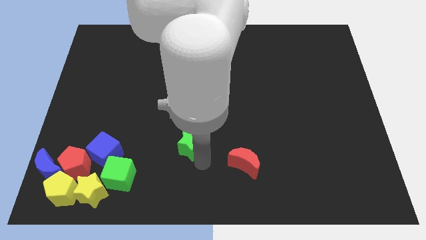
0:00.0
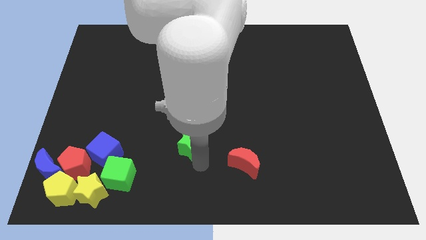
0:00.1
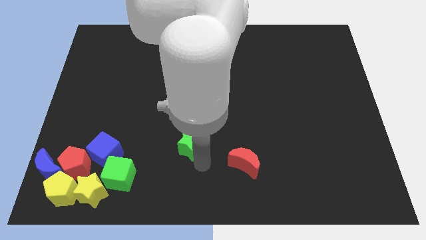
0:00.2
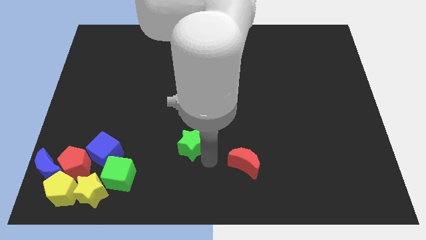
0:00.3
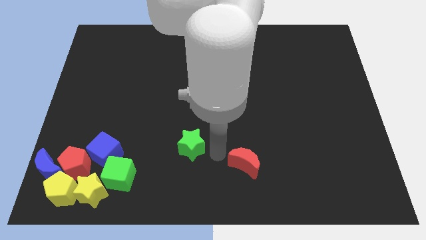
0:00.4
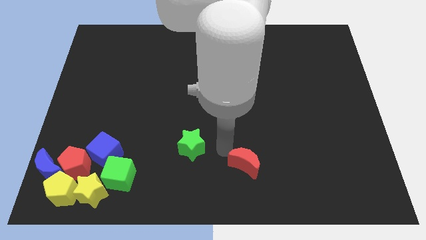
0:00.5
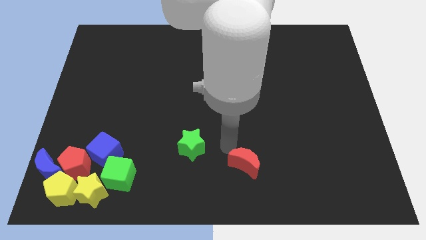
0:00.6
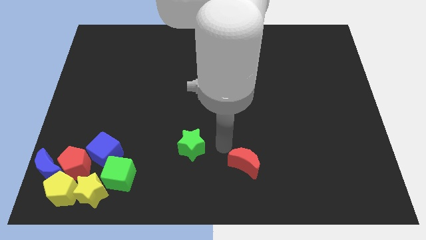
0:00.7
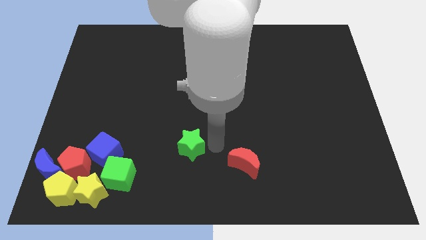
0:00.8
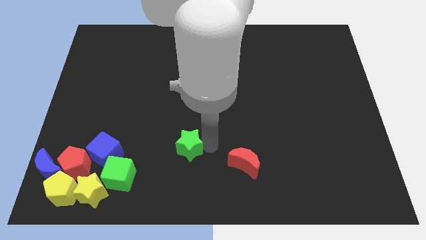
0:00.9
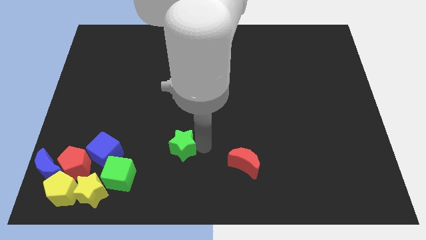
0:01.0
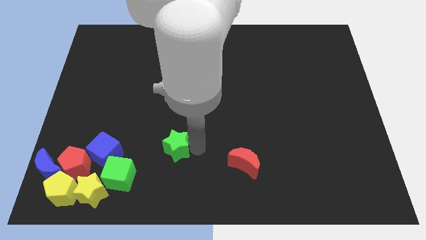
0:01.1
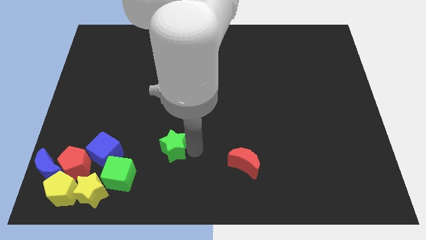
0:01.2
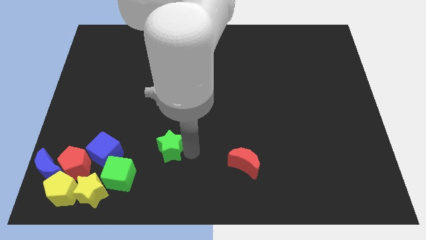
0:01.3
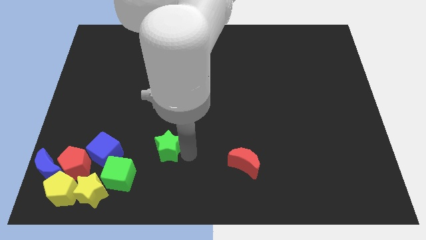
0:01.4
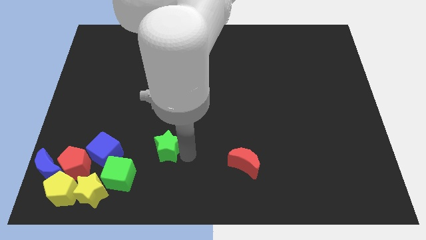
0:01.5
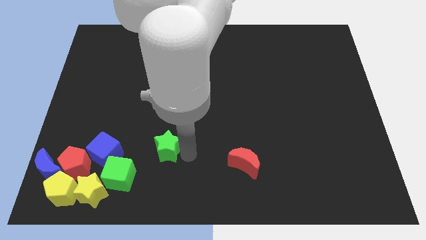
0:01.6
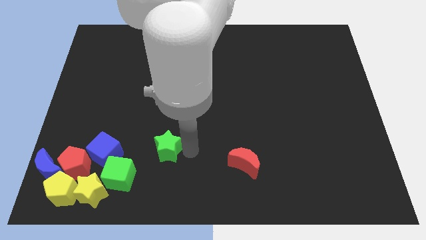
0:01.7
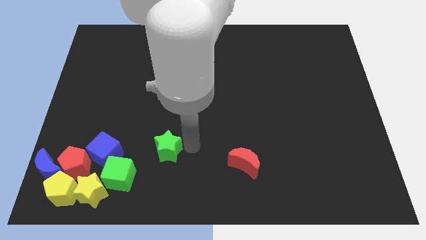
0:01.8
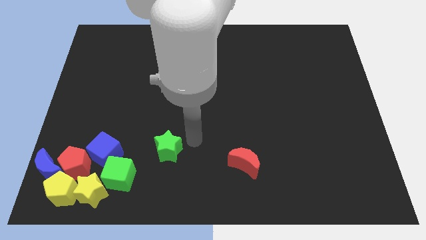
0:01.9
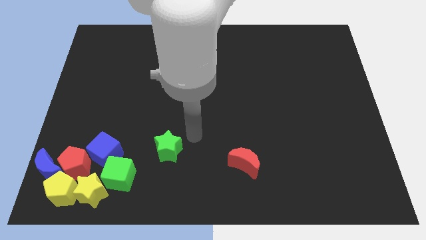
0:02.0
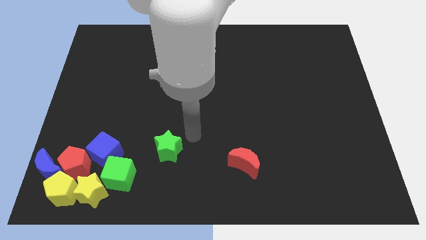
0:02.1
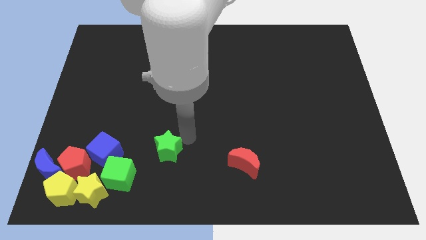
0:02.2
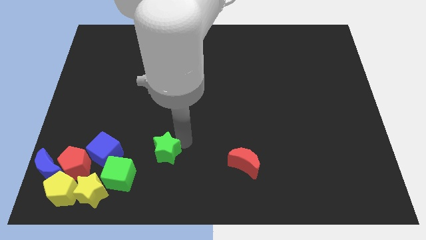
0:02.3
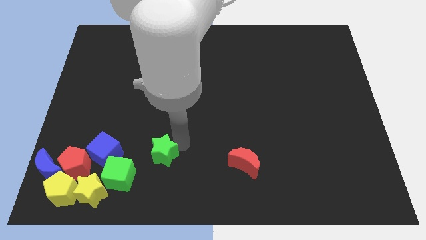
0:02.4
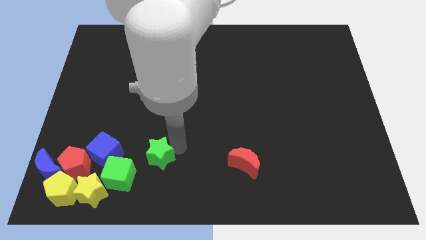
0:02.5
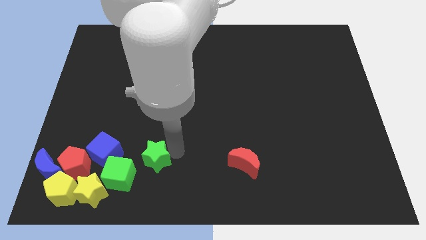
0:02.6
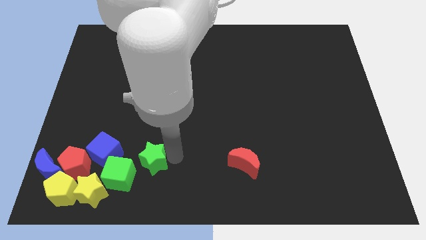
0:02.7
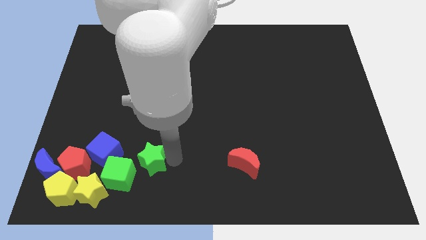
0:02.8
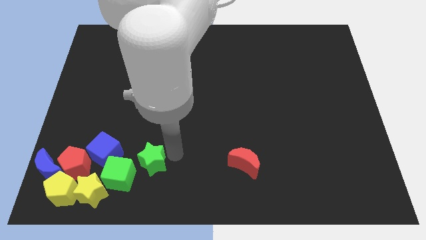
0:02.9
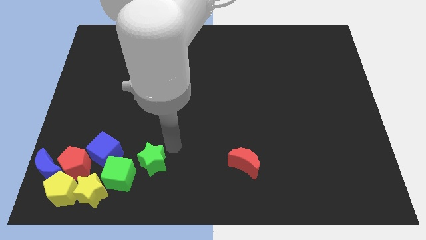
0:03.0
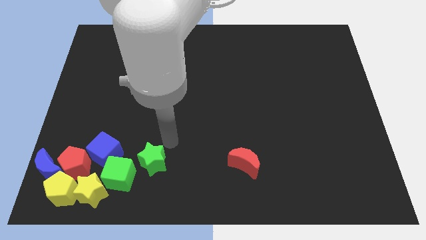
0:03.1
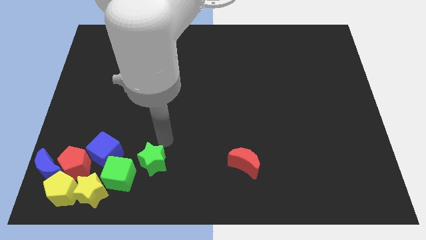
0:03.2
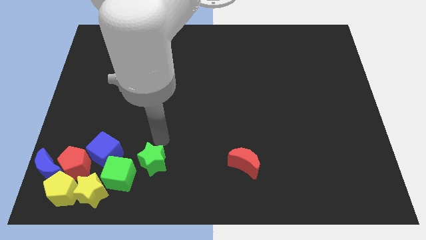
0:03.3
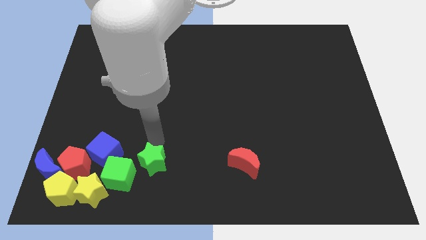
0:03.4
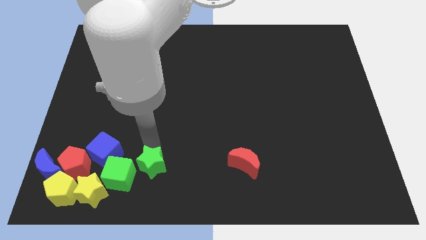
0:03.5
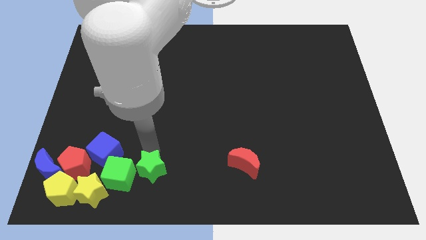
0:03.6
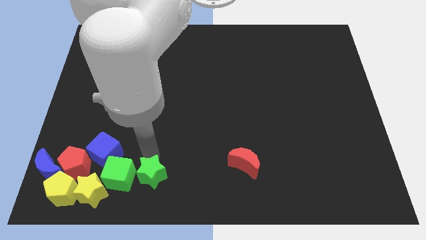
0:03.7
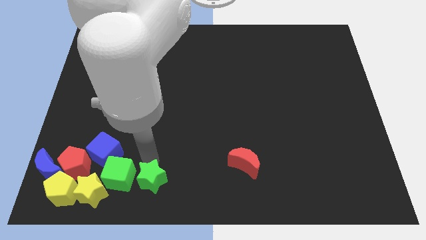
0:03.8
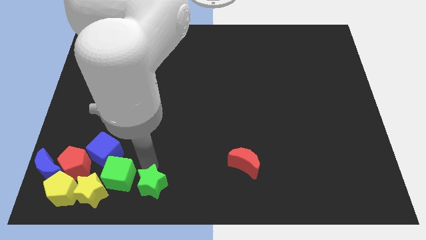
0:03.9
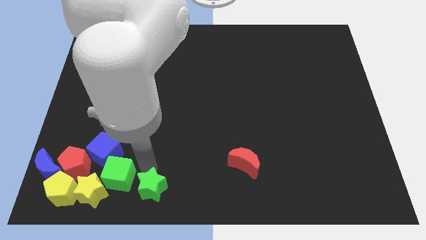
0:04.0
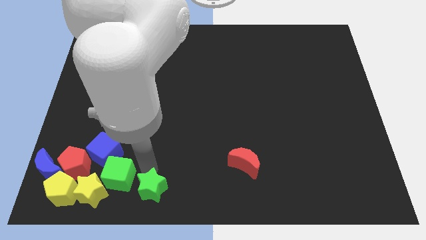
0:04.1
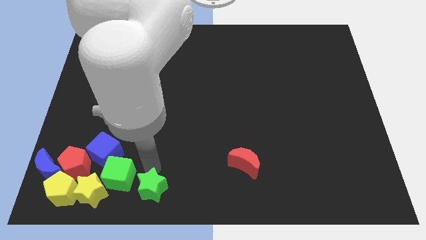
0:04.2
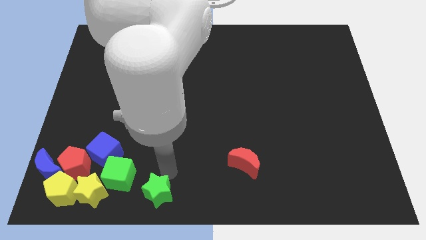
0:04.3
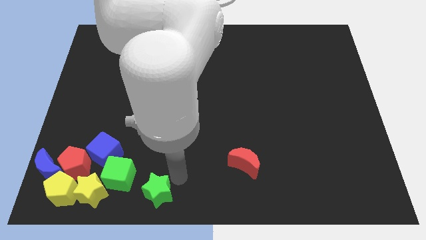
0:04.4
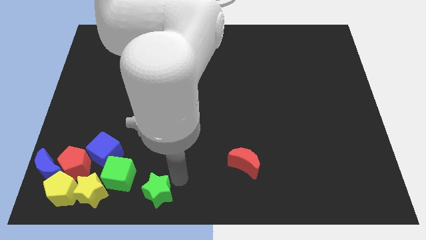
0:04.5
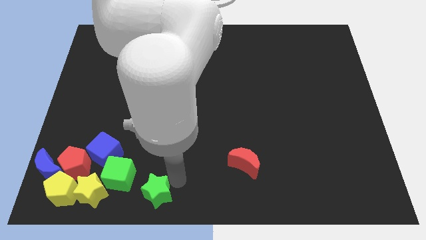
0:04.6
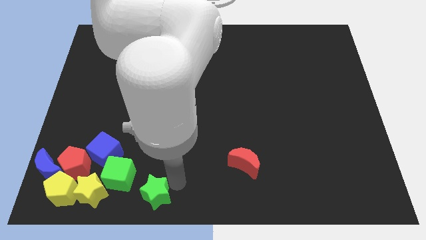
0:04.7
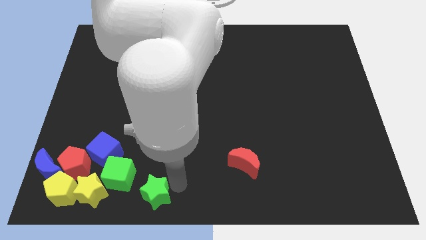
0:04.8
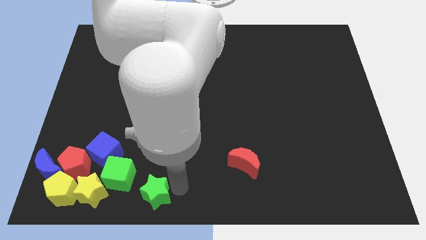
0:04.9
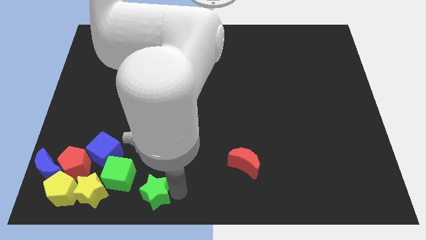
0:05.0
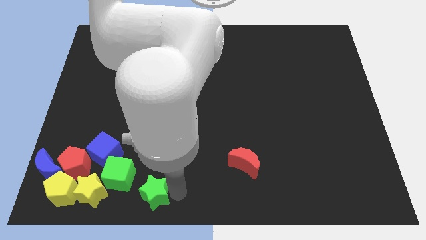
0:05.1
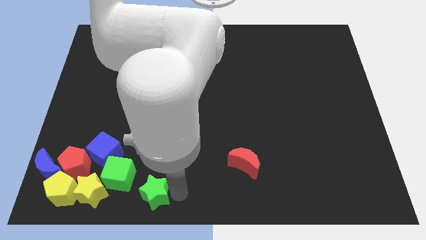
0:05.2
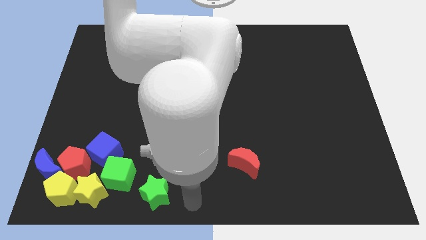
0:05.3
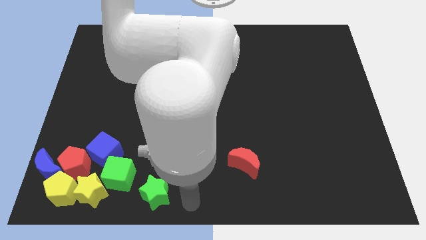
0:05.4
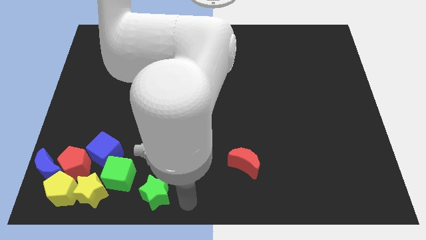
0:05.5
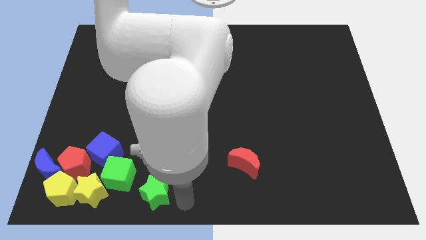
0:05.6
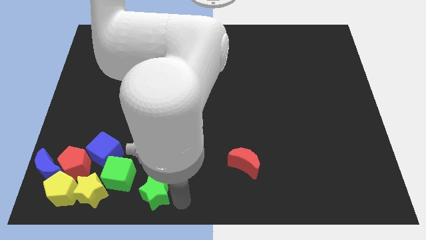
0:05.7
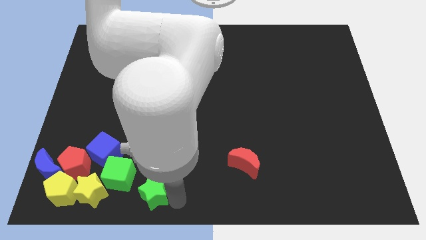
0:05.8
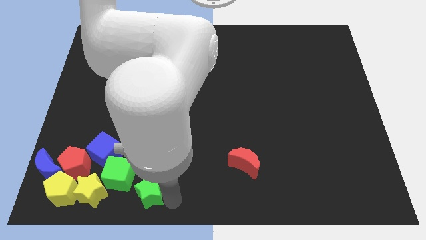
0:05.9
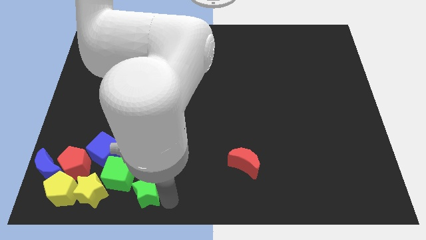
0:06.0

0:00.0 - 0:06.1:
push the green star to the group of blocks

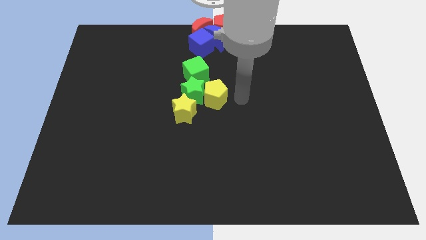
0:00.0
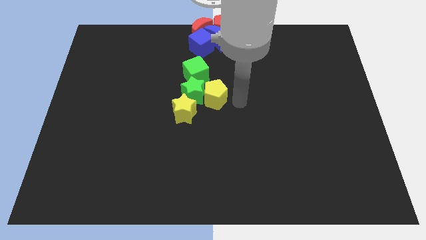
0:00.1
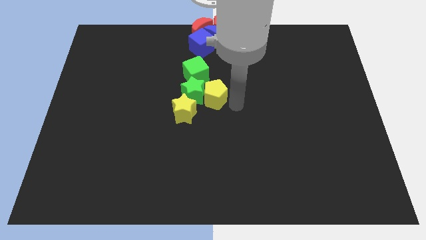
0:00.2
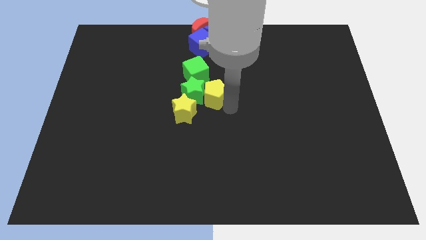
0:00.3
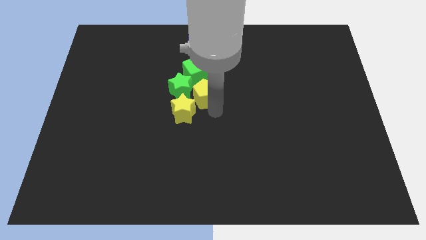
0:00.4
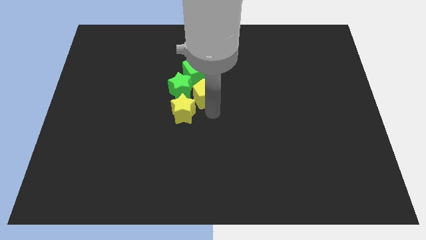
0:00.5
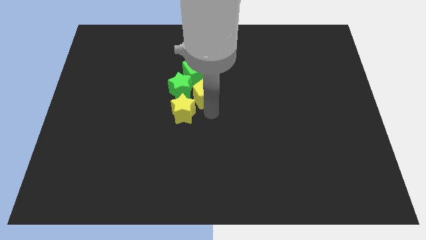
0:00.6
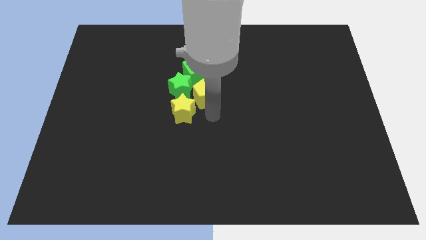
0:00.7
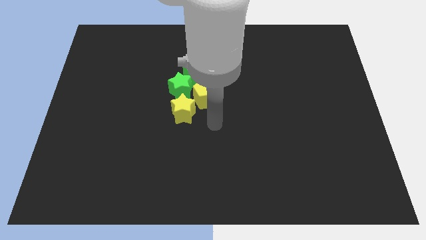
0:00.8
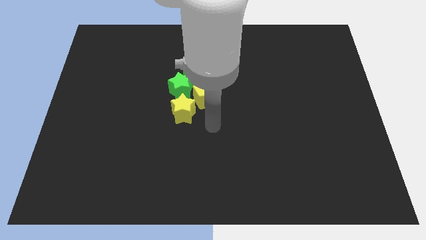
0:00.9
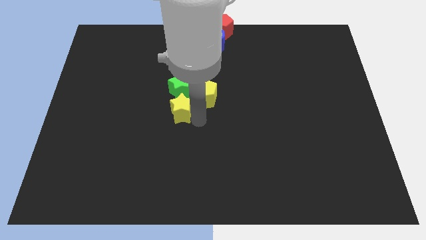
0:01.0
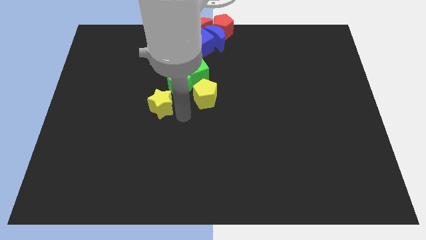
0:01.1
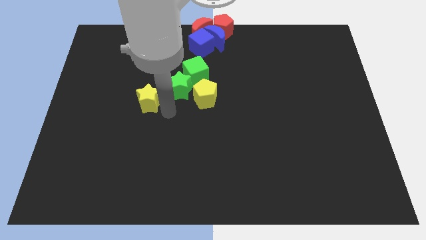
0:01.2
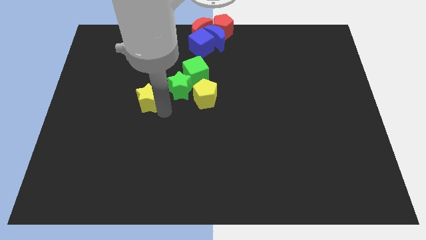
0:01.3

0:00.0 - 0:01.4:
push the yellow star diagonally to the bottom left of the green star

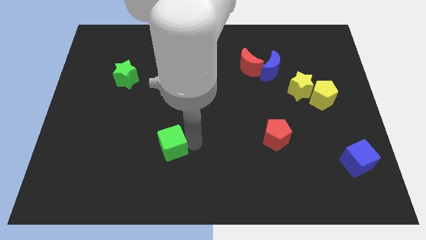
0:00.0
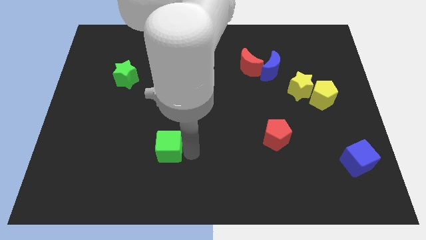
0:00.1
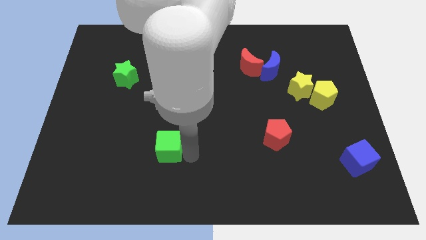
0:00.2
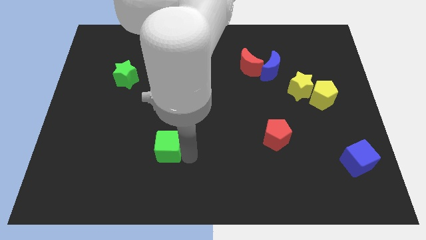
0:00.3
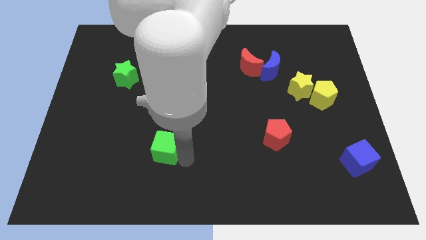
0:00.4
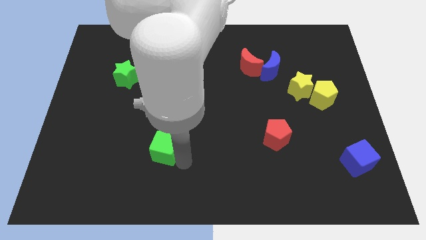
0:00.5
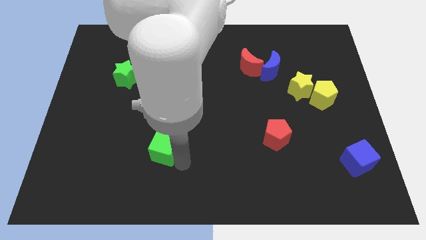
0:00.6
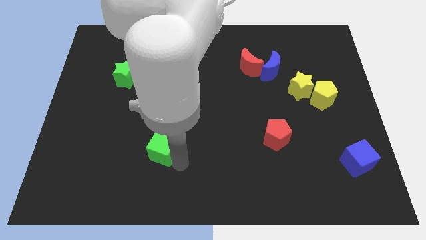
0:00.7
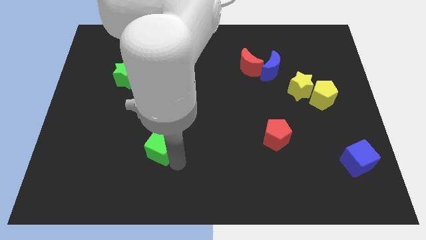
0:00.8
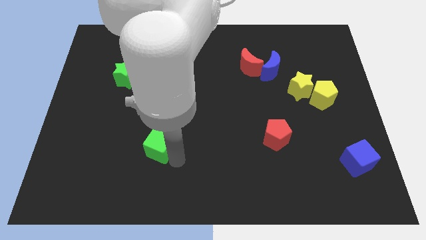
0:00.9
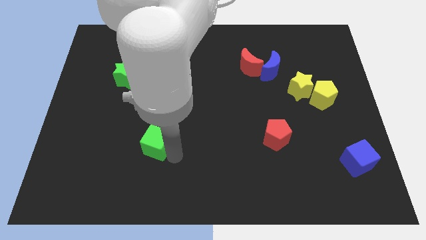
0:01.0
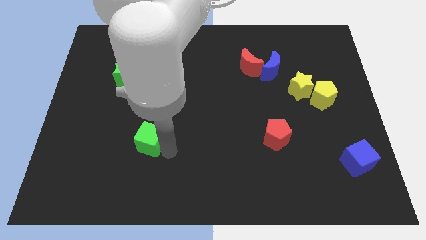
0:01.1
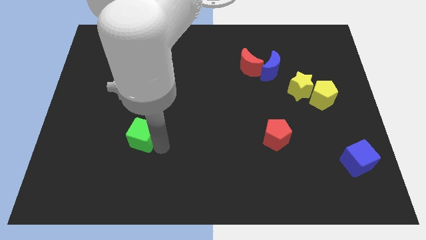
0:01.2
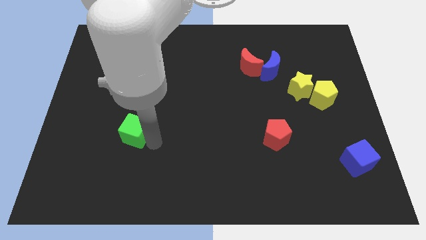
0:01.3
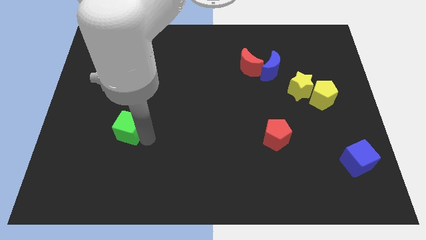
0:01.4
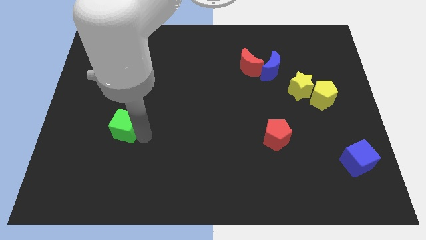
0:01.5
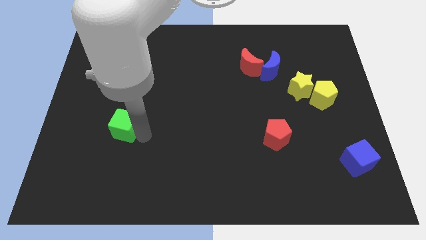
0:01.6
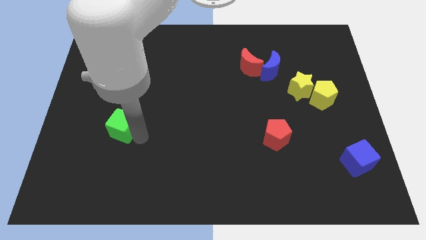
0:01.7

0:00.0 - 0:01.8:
slide the green cube towards center left
